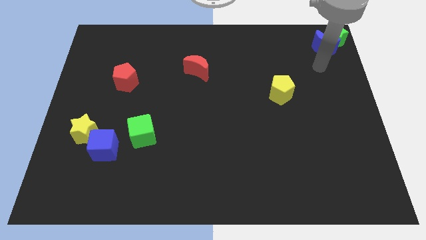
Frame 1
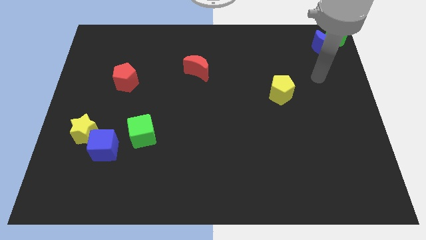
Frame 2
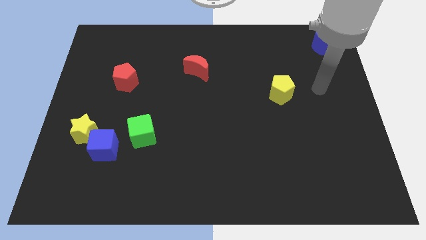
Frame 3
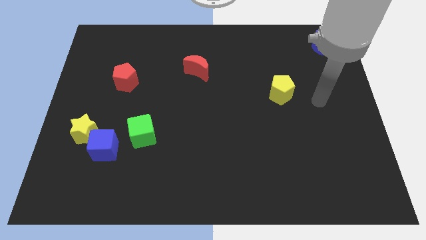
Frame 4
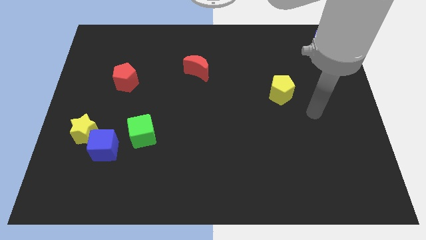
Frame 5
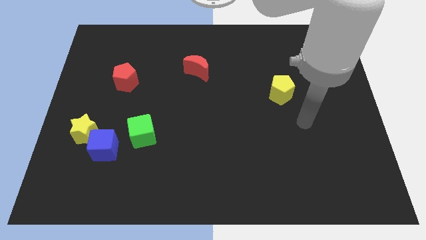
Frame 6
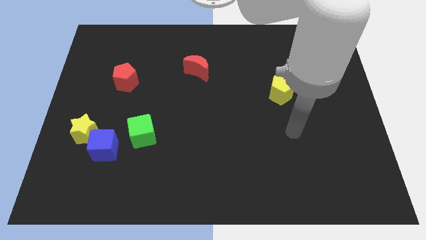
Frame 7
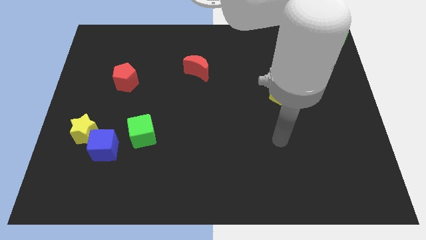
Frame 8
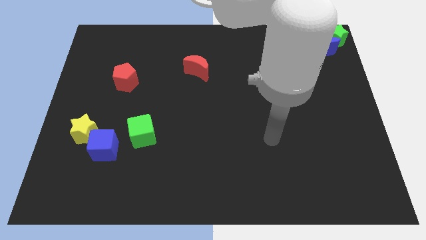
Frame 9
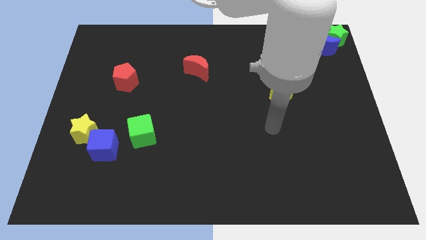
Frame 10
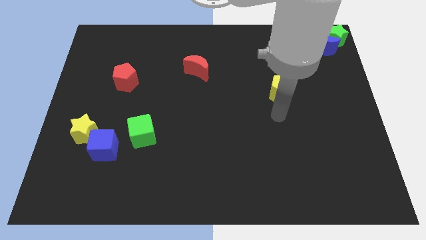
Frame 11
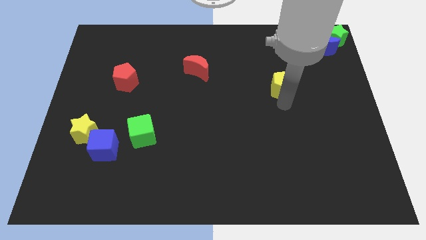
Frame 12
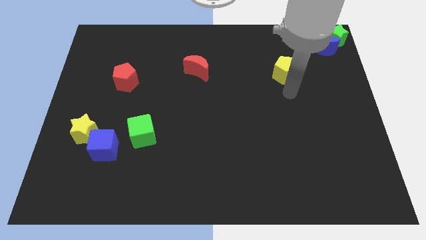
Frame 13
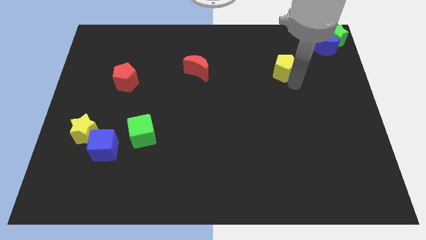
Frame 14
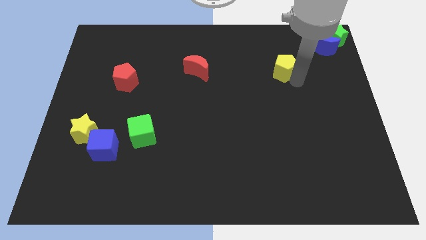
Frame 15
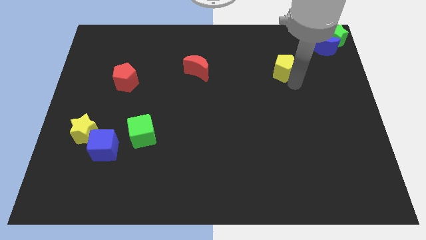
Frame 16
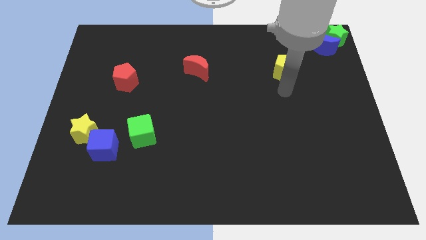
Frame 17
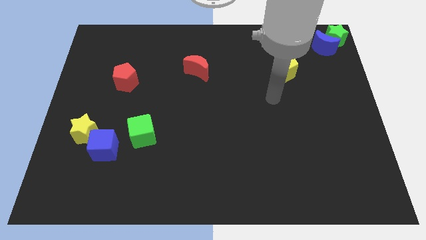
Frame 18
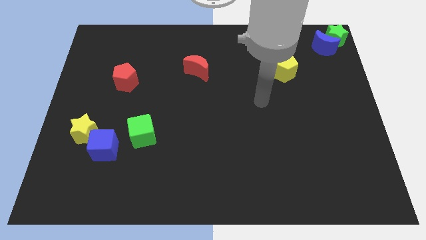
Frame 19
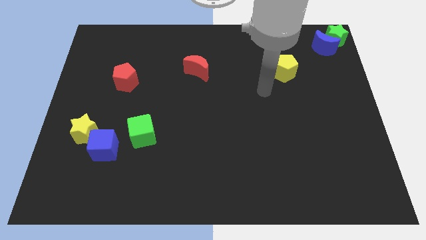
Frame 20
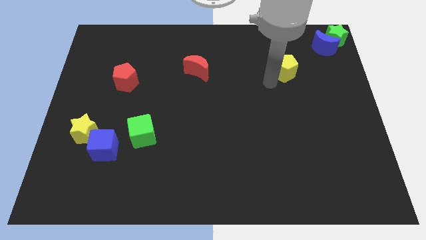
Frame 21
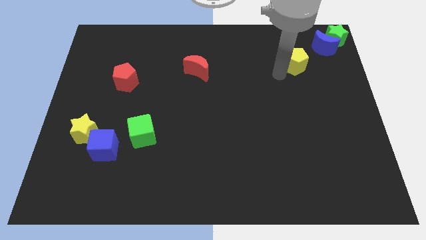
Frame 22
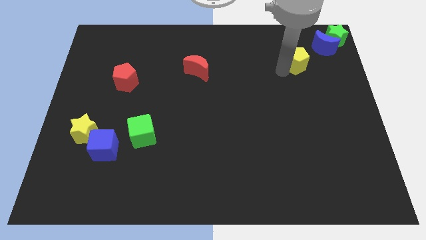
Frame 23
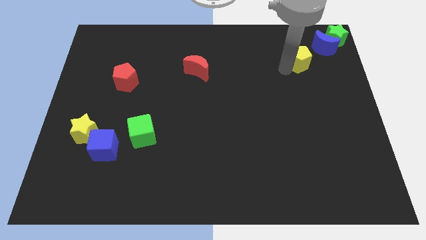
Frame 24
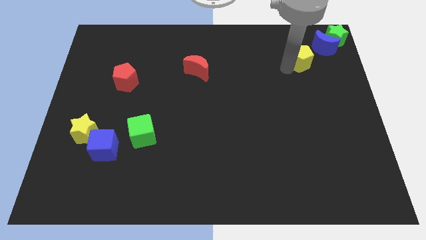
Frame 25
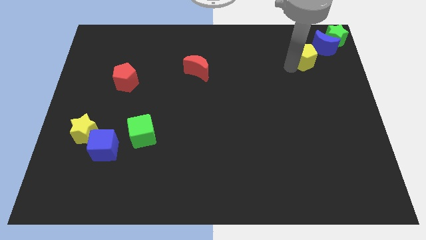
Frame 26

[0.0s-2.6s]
move the yellow pentagon close to the blue crescent

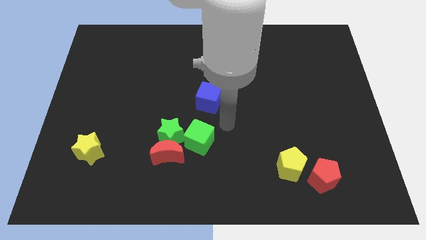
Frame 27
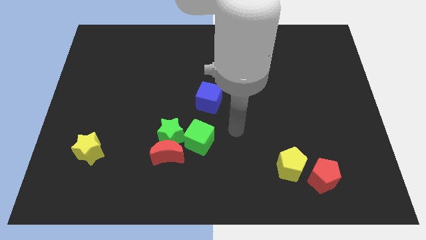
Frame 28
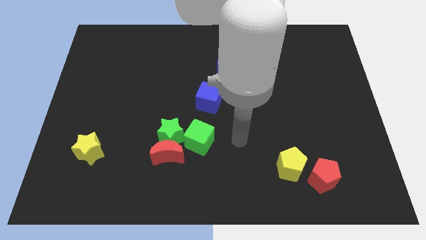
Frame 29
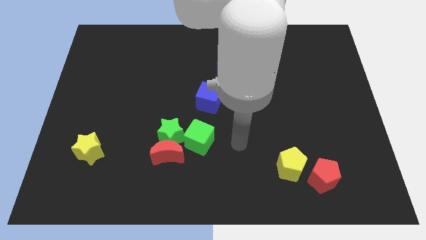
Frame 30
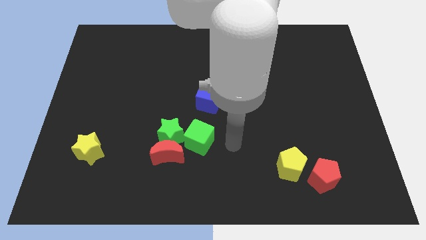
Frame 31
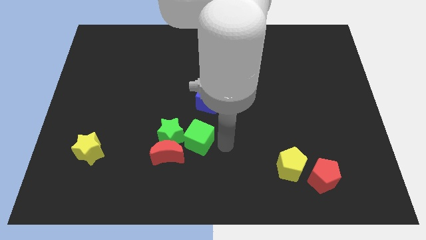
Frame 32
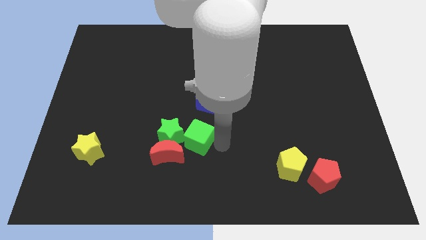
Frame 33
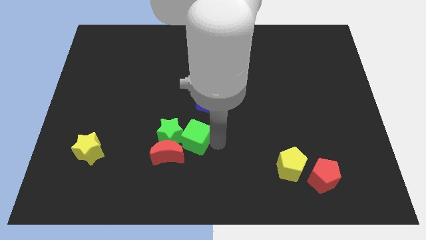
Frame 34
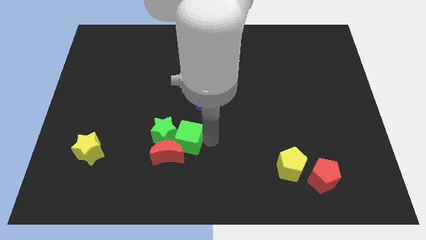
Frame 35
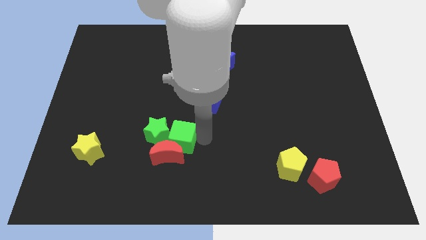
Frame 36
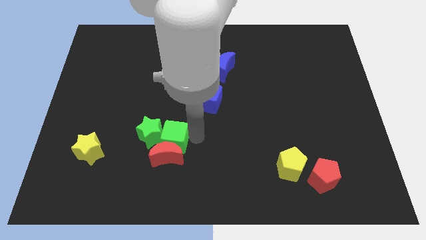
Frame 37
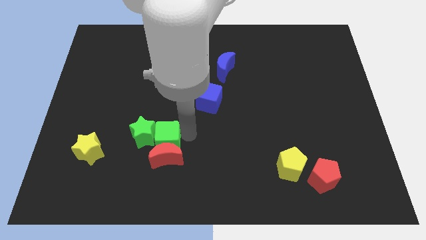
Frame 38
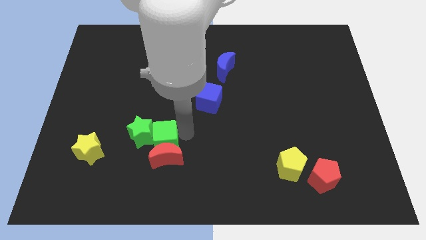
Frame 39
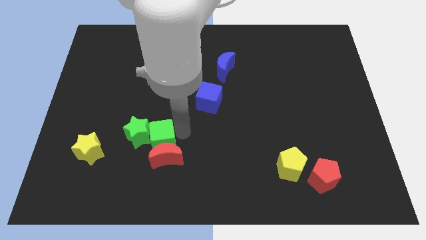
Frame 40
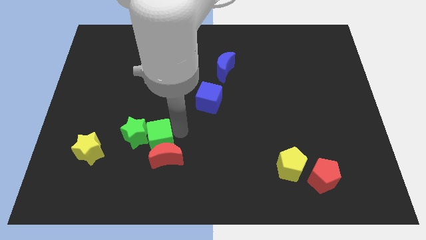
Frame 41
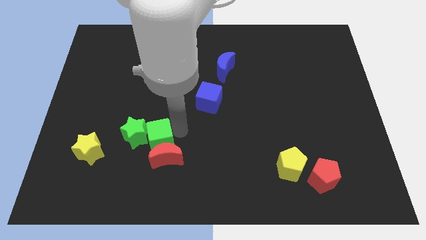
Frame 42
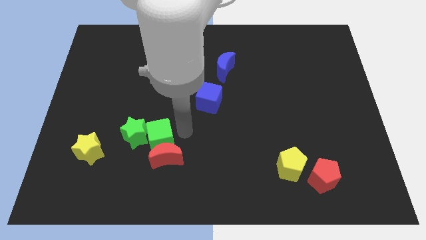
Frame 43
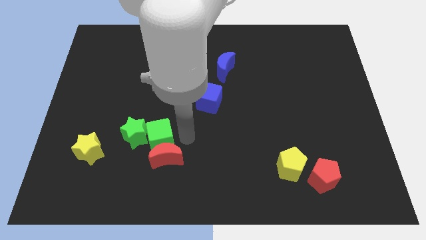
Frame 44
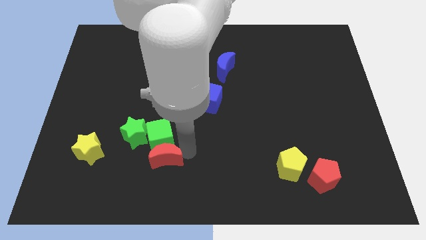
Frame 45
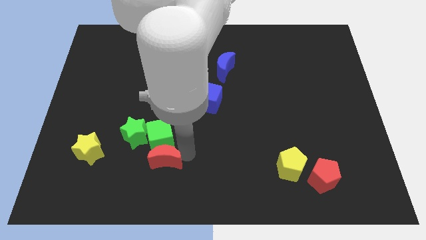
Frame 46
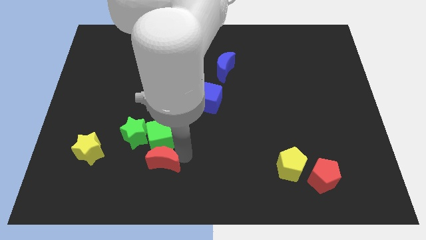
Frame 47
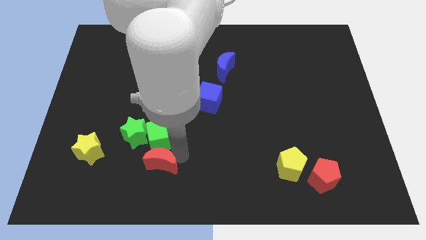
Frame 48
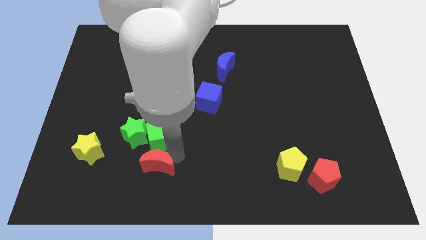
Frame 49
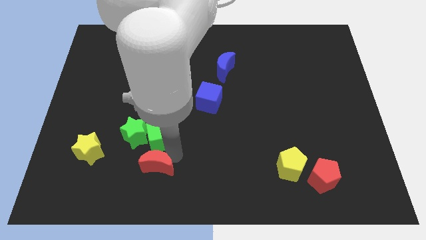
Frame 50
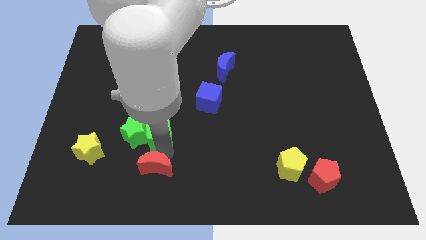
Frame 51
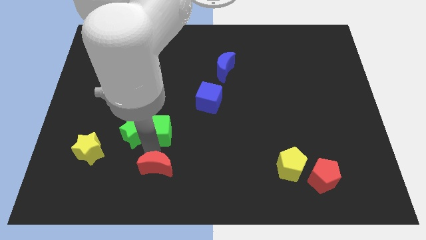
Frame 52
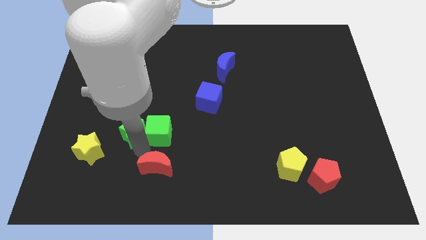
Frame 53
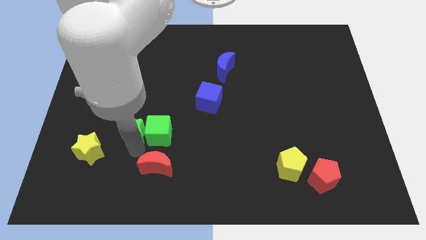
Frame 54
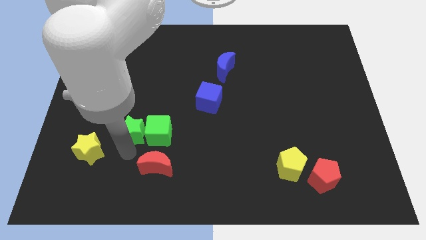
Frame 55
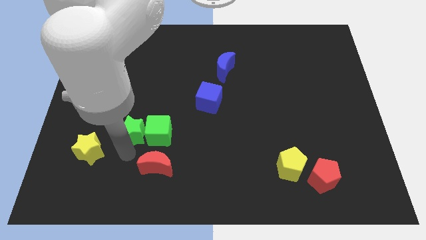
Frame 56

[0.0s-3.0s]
push the green cube slightly to the left

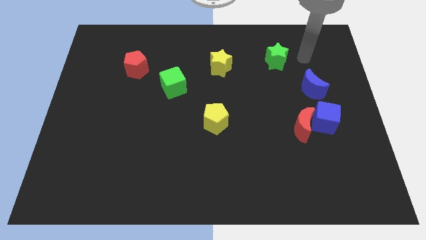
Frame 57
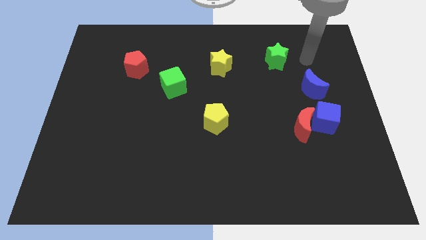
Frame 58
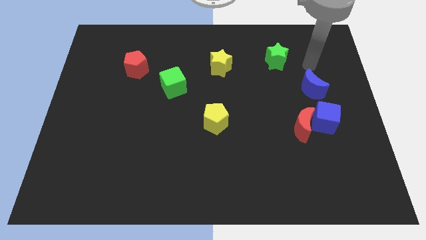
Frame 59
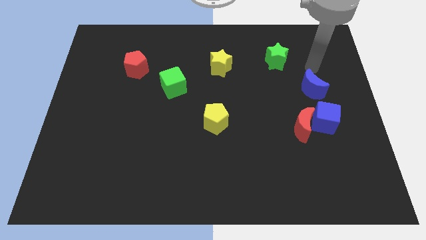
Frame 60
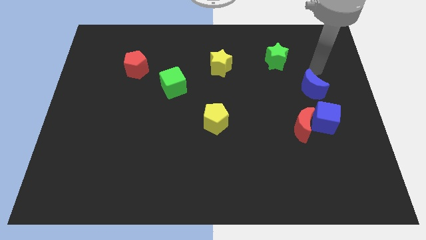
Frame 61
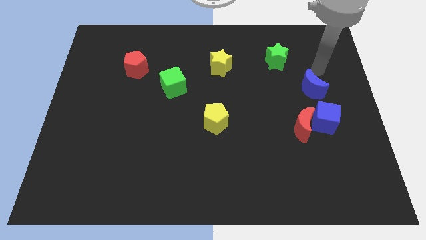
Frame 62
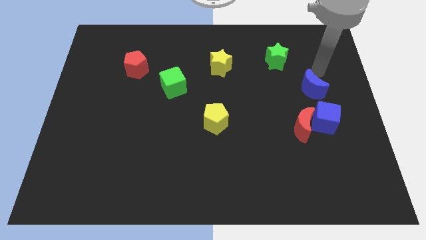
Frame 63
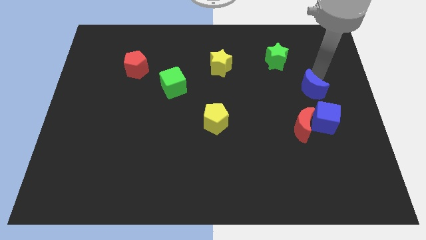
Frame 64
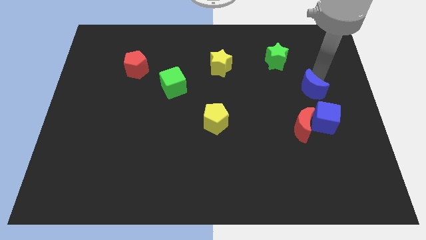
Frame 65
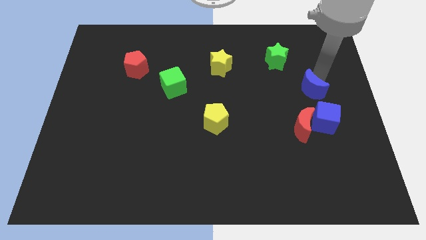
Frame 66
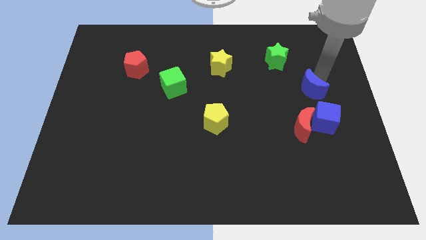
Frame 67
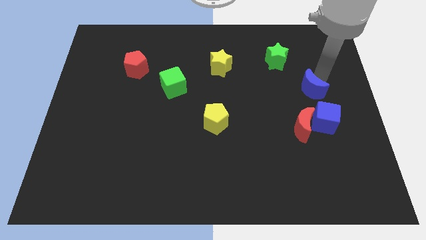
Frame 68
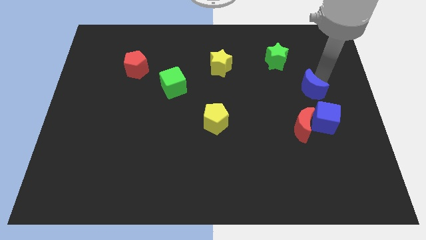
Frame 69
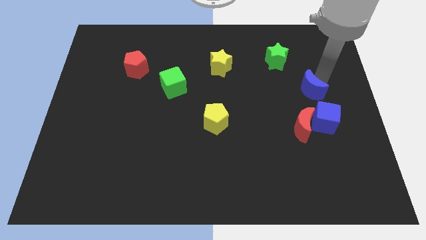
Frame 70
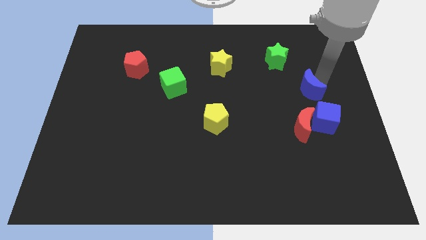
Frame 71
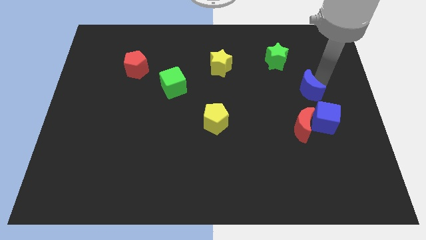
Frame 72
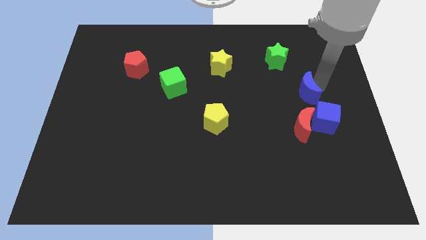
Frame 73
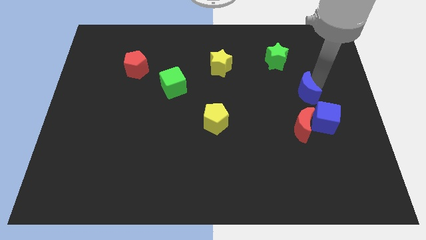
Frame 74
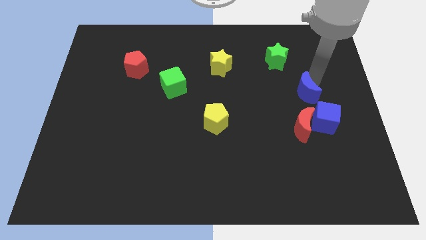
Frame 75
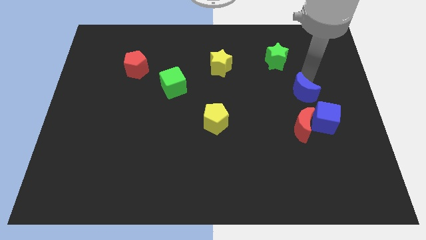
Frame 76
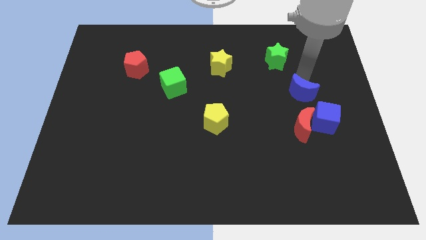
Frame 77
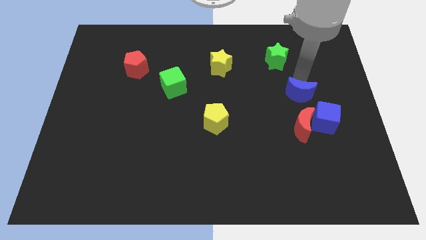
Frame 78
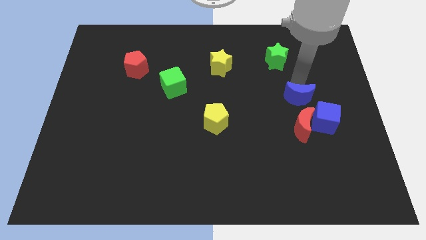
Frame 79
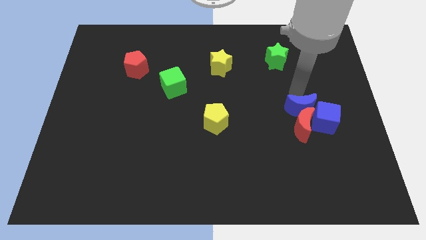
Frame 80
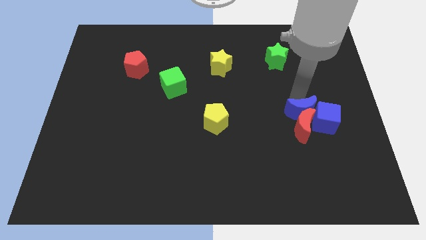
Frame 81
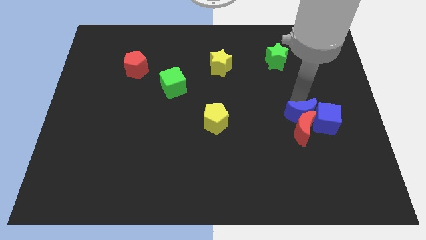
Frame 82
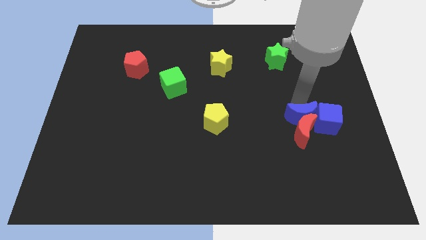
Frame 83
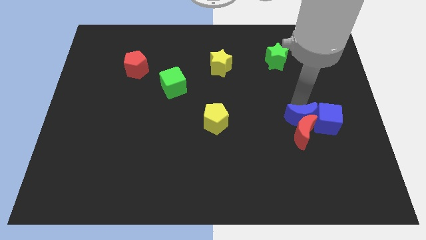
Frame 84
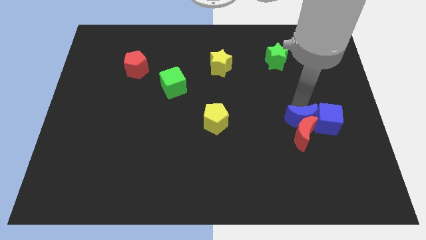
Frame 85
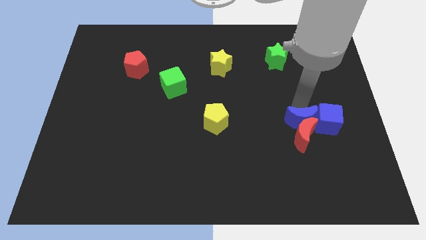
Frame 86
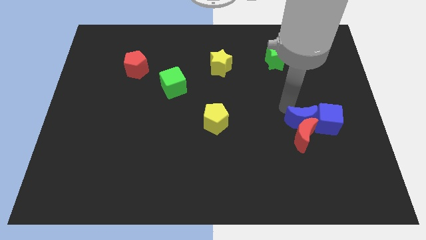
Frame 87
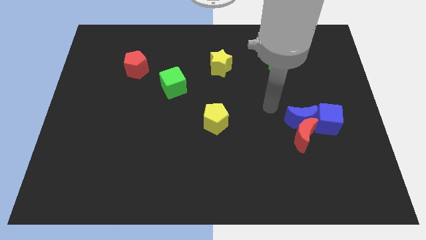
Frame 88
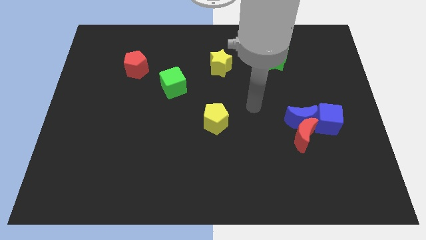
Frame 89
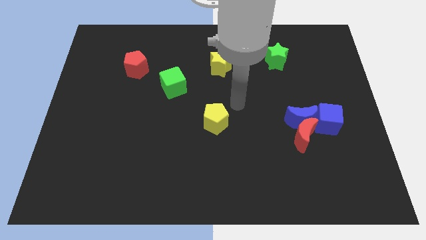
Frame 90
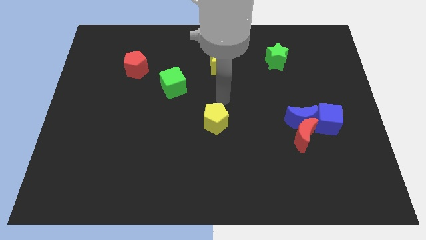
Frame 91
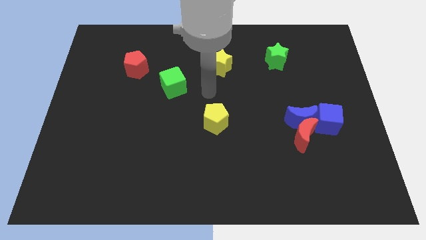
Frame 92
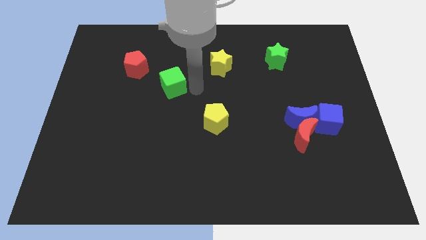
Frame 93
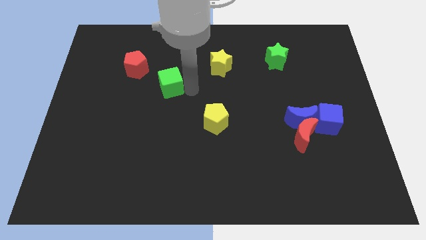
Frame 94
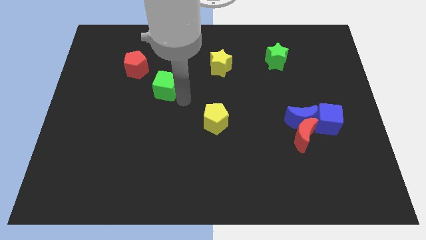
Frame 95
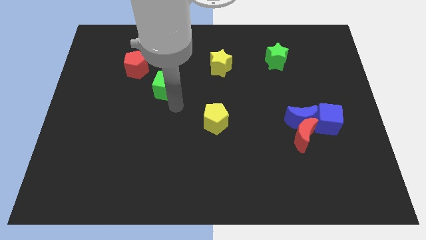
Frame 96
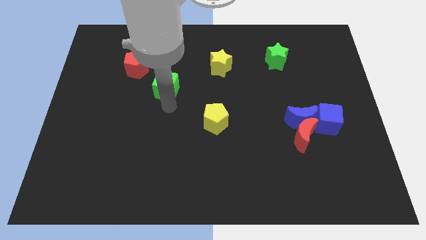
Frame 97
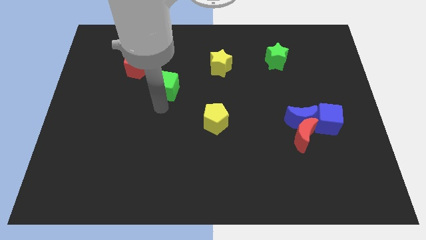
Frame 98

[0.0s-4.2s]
push the blue crescent into the red crescent
